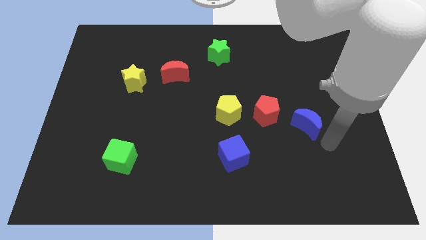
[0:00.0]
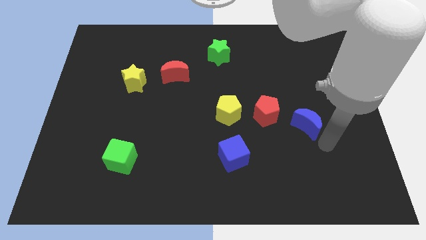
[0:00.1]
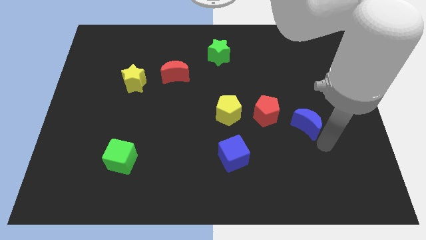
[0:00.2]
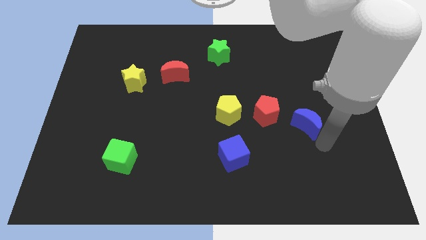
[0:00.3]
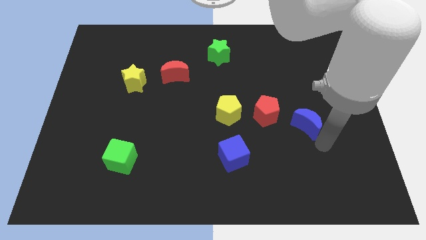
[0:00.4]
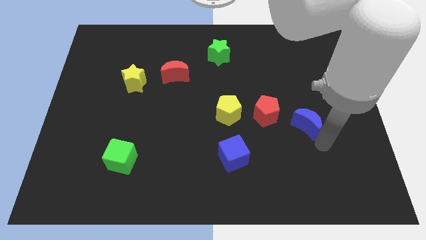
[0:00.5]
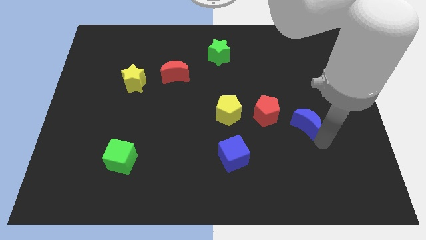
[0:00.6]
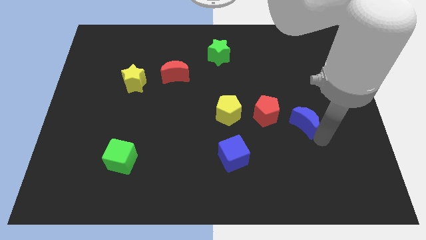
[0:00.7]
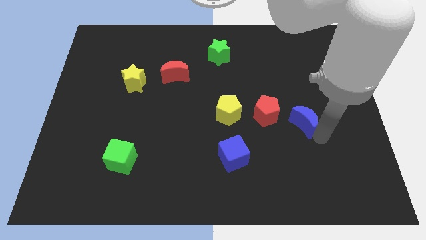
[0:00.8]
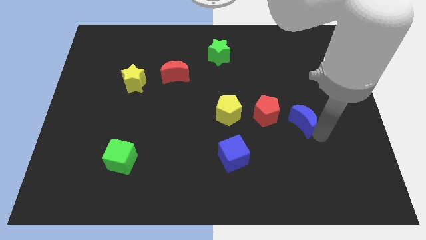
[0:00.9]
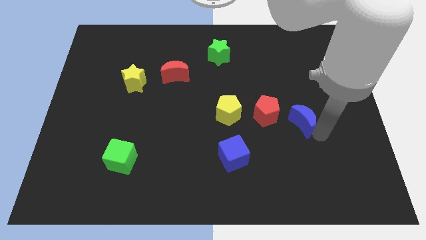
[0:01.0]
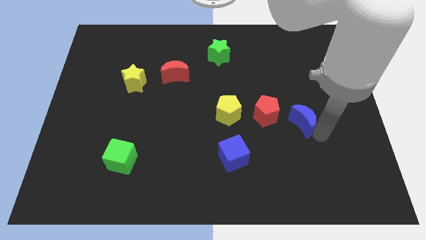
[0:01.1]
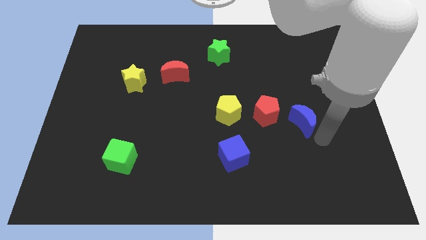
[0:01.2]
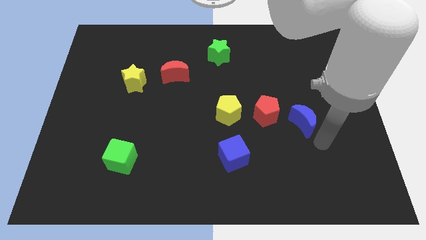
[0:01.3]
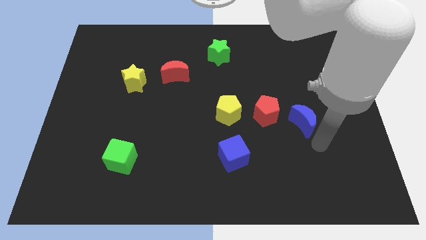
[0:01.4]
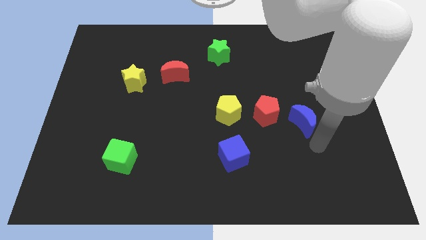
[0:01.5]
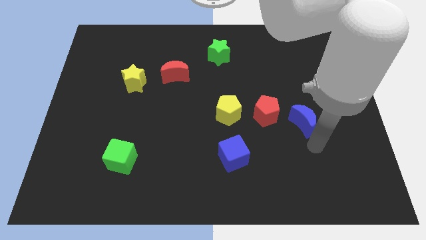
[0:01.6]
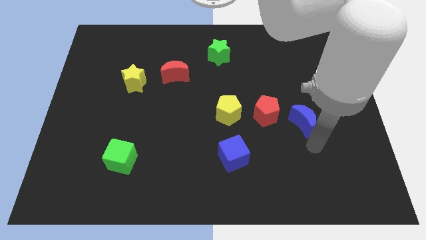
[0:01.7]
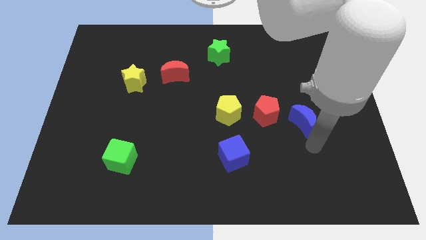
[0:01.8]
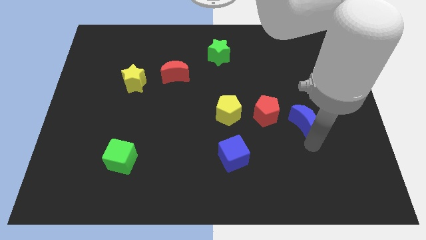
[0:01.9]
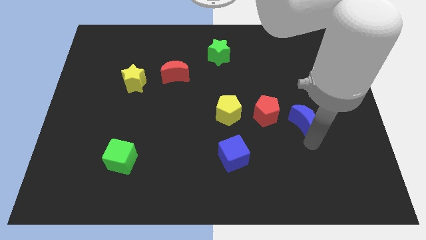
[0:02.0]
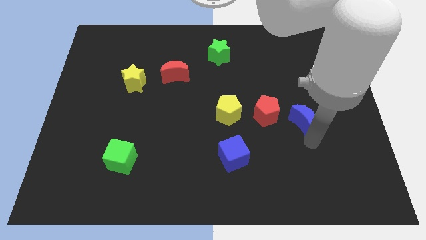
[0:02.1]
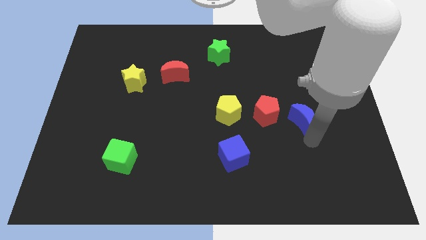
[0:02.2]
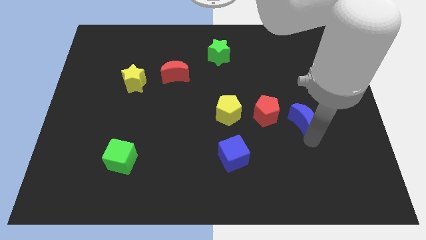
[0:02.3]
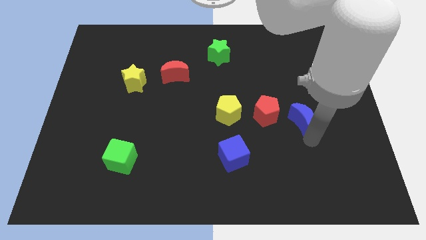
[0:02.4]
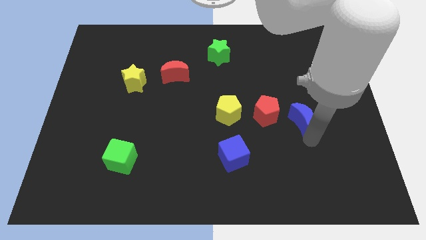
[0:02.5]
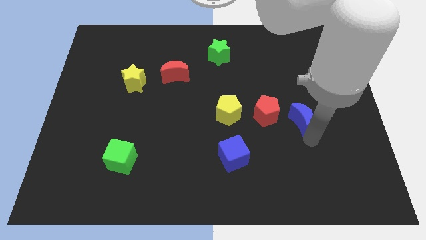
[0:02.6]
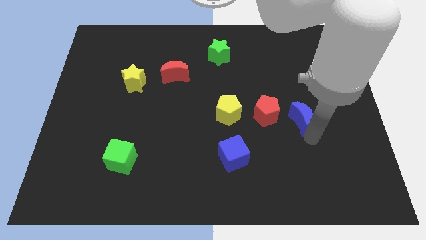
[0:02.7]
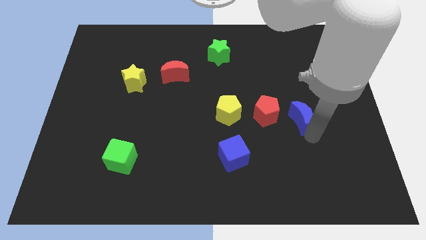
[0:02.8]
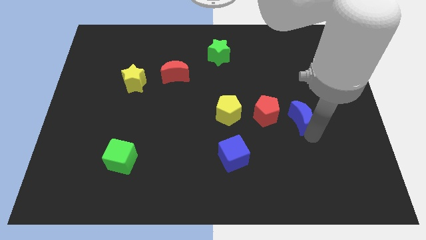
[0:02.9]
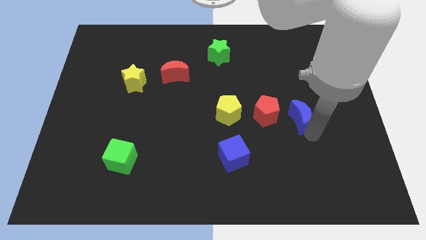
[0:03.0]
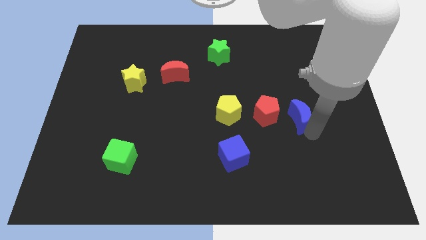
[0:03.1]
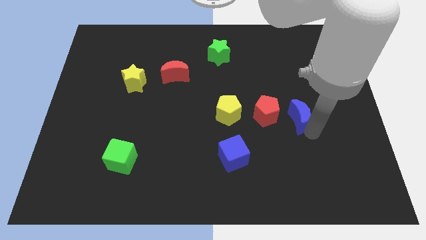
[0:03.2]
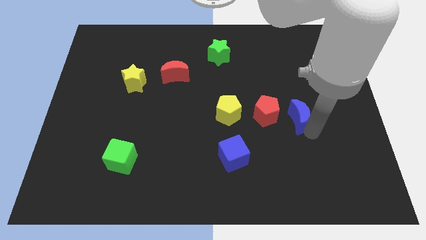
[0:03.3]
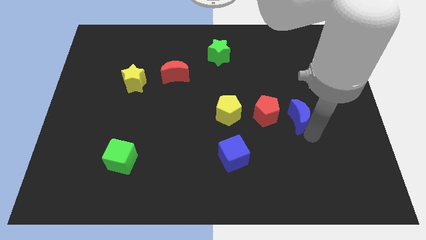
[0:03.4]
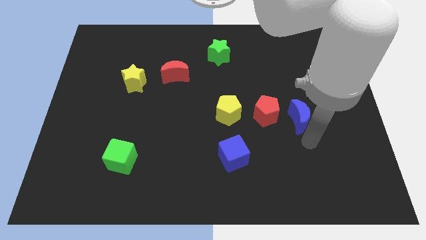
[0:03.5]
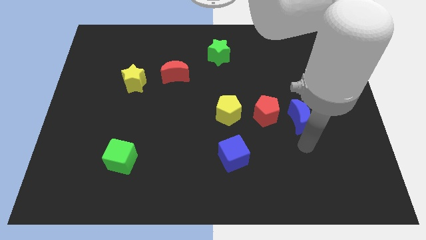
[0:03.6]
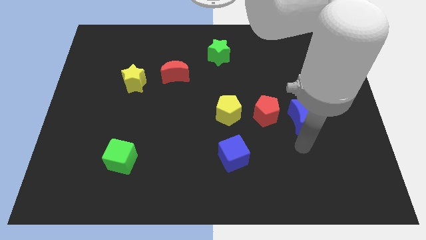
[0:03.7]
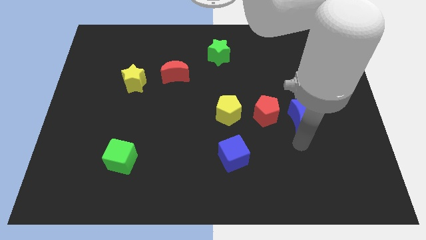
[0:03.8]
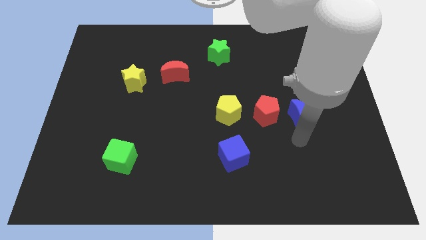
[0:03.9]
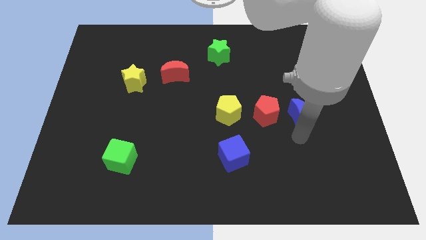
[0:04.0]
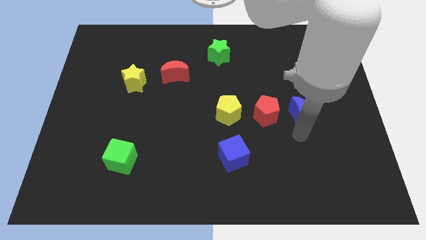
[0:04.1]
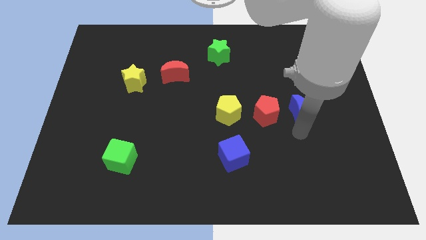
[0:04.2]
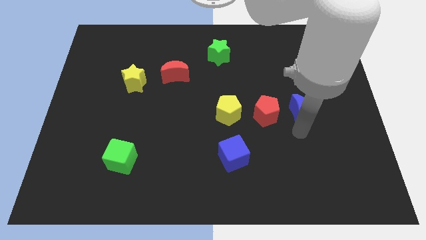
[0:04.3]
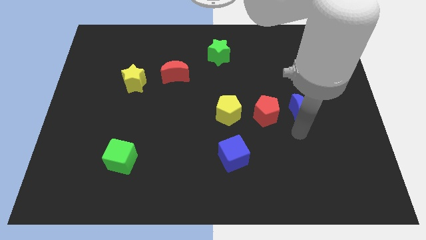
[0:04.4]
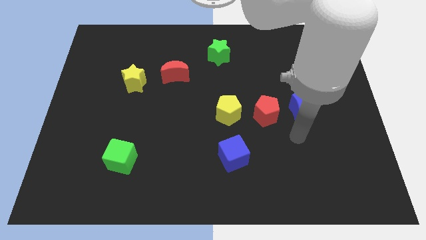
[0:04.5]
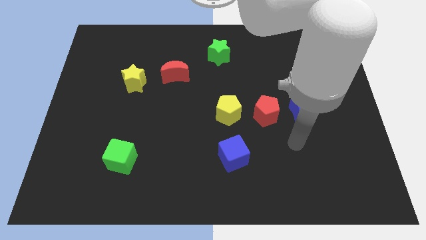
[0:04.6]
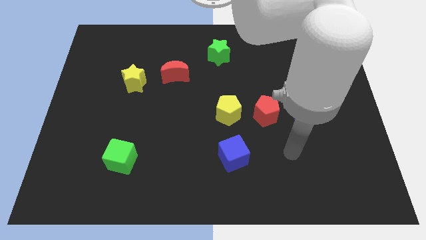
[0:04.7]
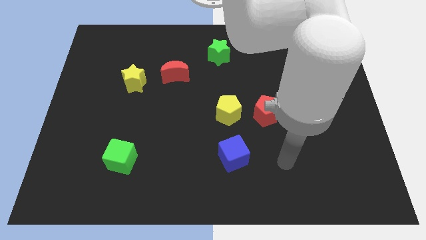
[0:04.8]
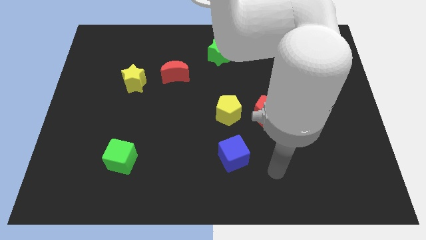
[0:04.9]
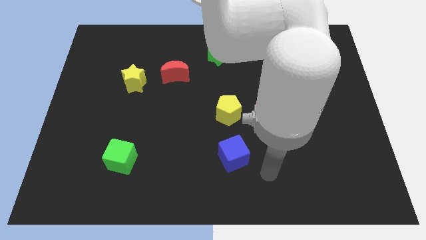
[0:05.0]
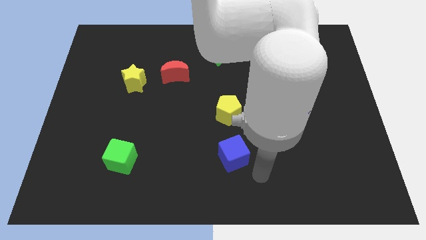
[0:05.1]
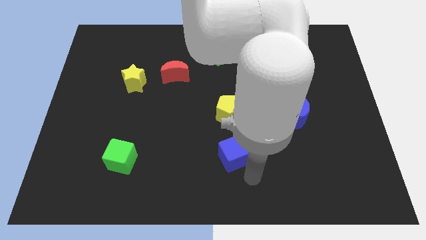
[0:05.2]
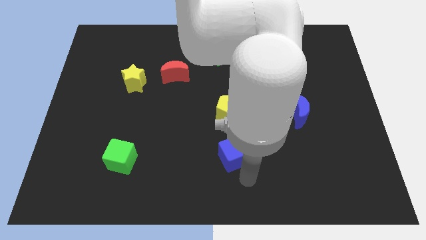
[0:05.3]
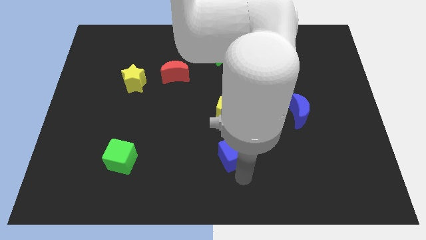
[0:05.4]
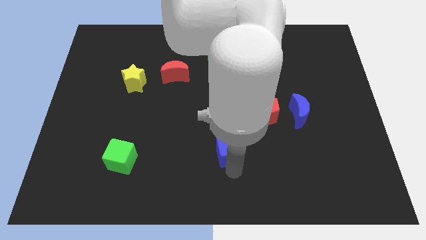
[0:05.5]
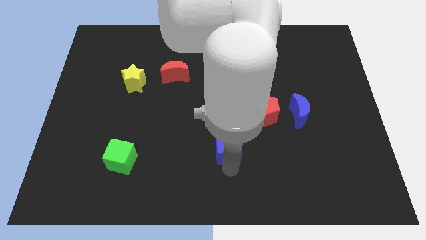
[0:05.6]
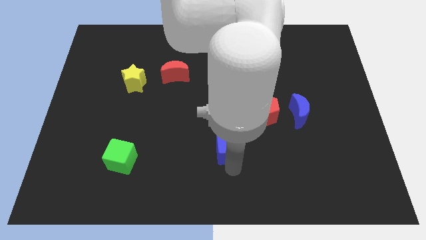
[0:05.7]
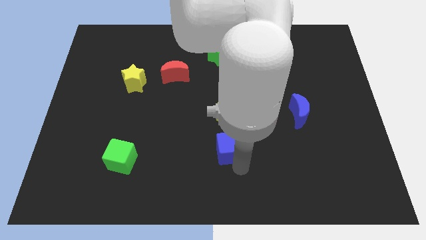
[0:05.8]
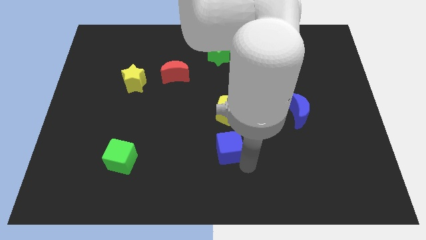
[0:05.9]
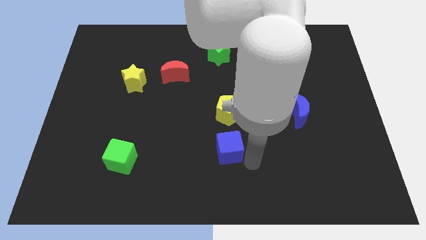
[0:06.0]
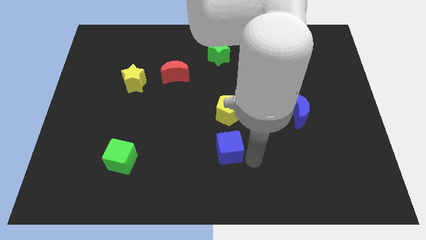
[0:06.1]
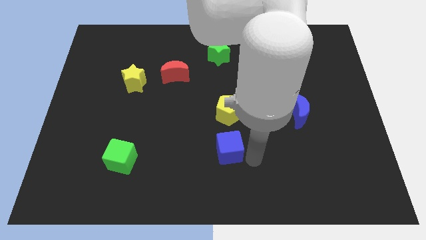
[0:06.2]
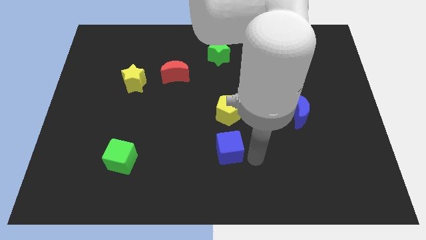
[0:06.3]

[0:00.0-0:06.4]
tap on the bottom side of the blue cube

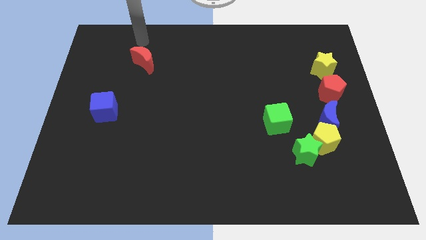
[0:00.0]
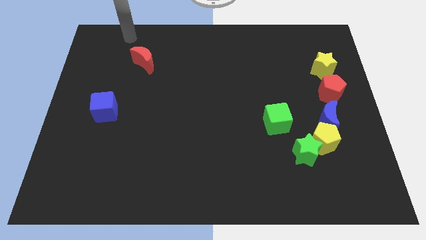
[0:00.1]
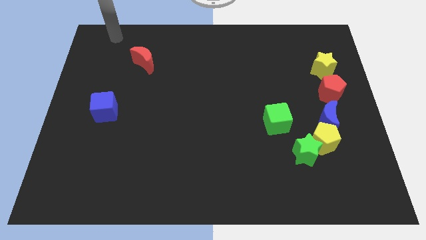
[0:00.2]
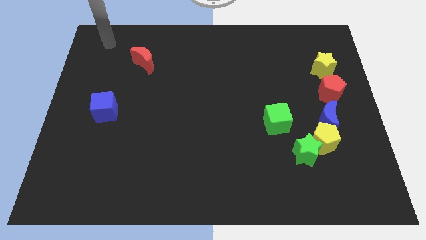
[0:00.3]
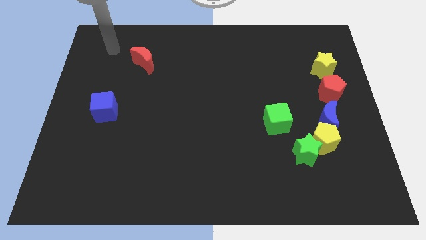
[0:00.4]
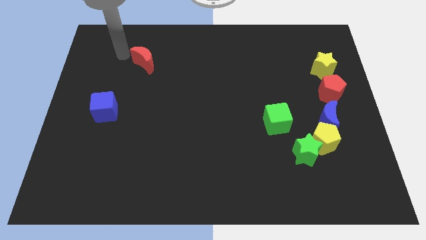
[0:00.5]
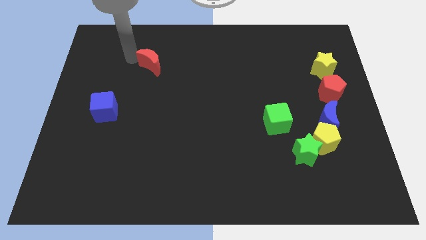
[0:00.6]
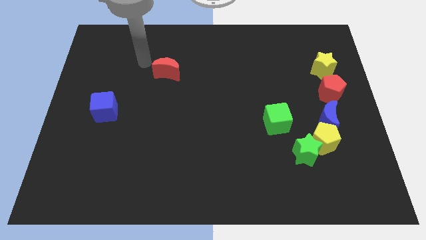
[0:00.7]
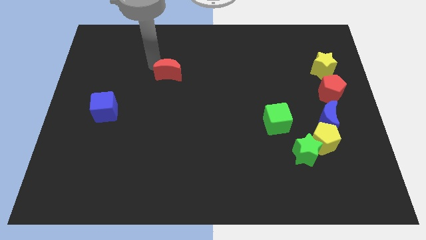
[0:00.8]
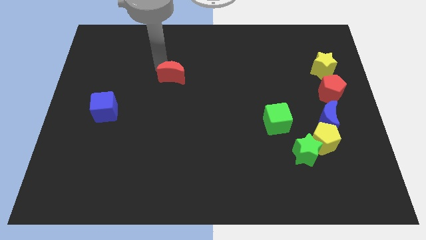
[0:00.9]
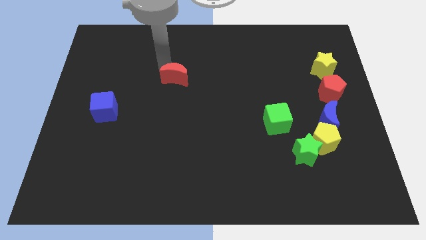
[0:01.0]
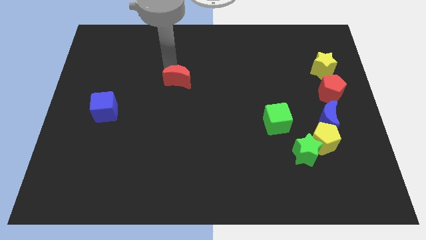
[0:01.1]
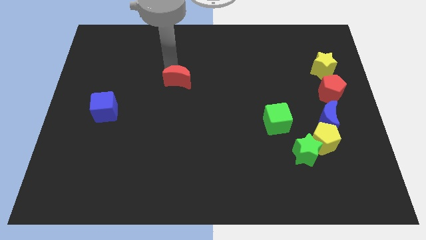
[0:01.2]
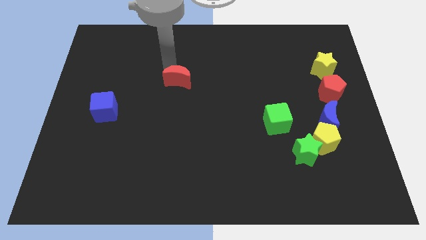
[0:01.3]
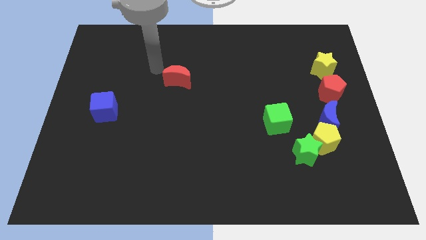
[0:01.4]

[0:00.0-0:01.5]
move the red crescent to the right side

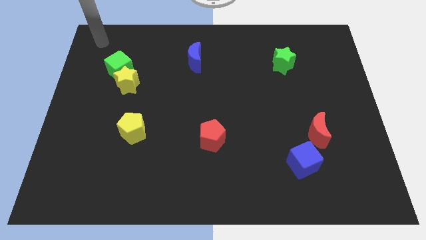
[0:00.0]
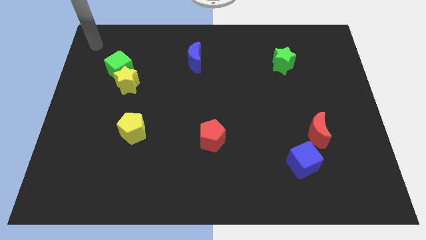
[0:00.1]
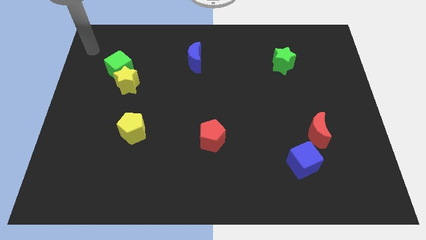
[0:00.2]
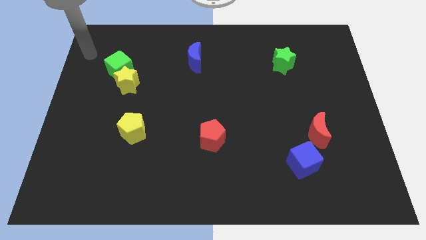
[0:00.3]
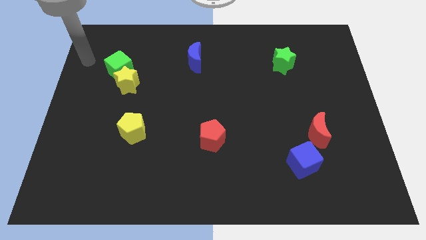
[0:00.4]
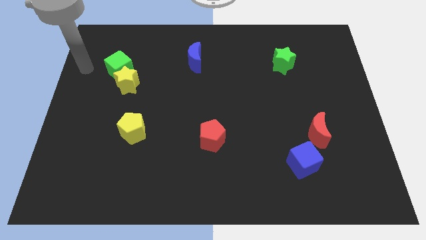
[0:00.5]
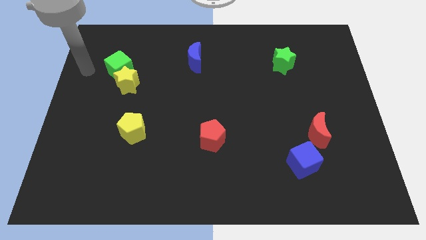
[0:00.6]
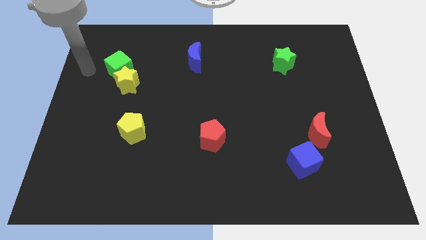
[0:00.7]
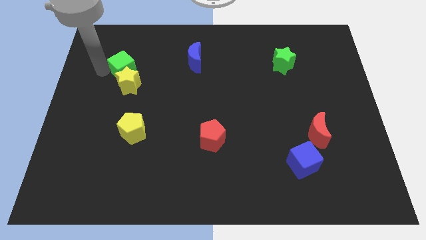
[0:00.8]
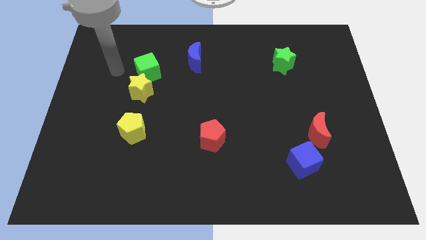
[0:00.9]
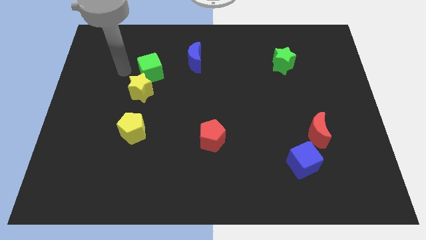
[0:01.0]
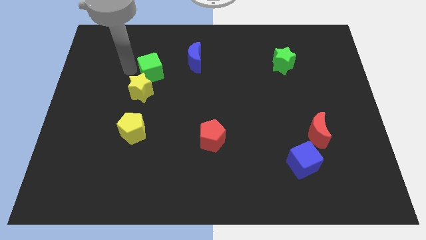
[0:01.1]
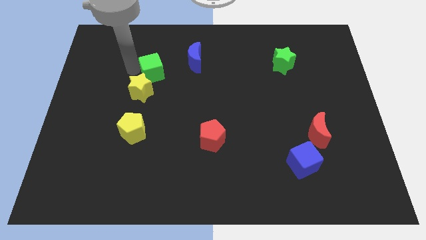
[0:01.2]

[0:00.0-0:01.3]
move green cube towards blue moon
